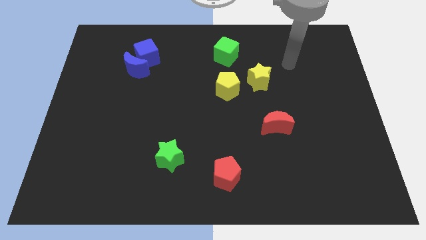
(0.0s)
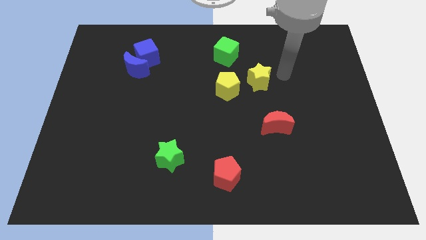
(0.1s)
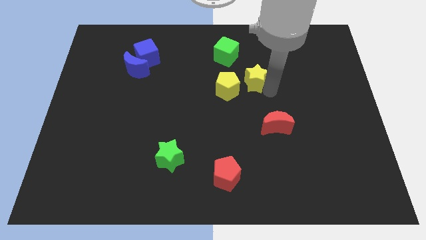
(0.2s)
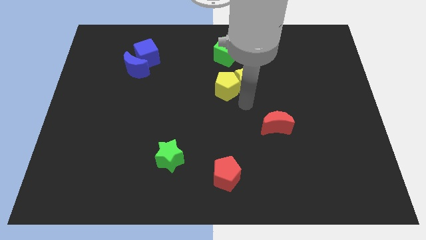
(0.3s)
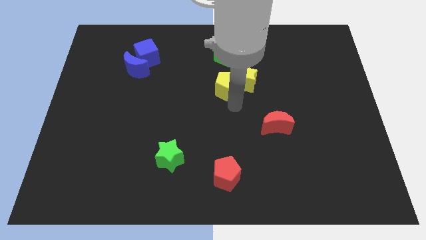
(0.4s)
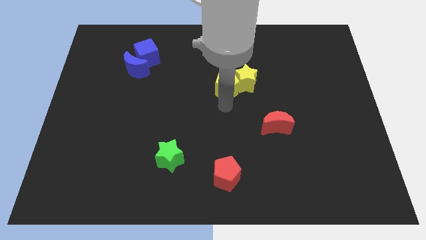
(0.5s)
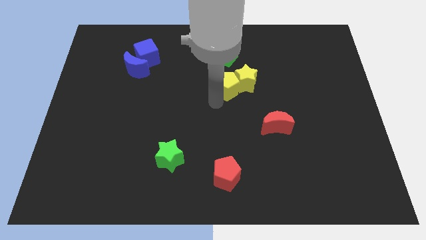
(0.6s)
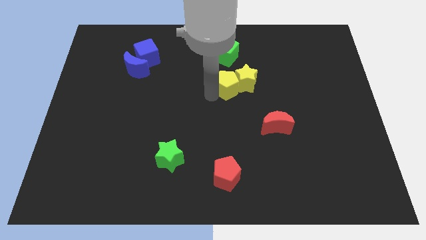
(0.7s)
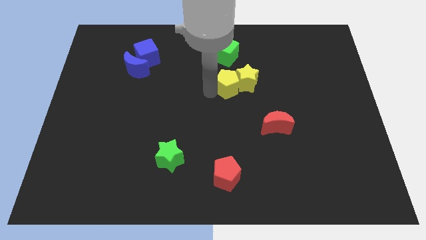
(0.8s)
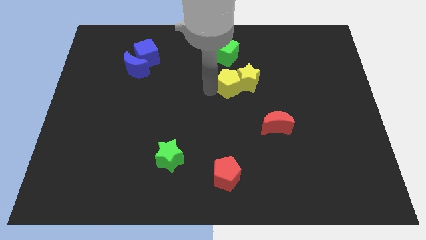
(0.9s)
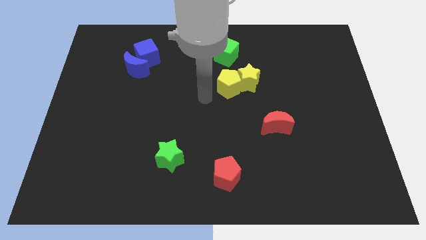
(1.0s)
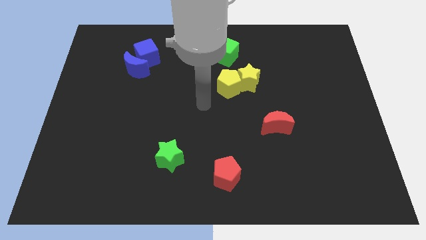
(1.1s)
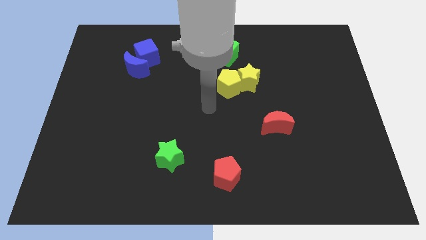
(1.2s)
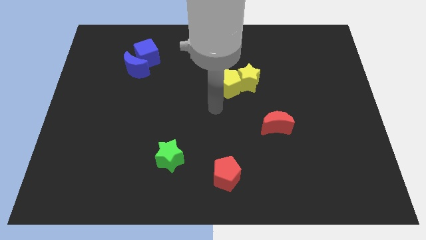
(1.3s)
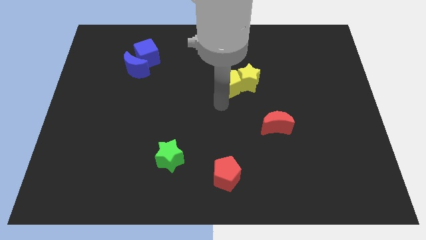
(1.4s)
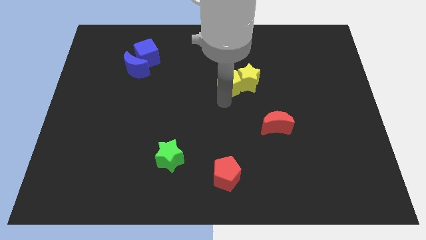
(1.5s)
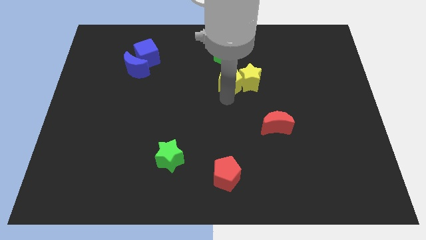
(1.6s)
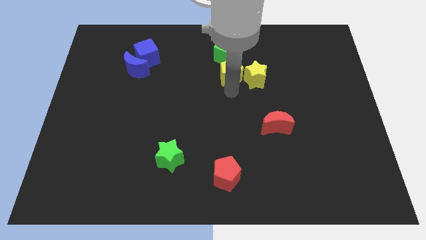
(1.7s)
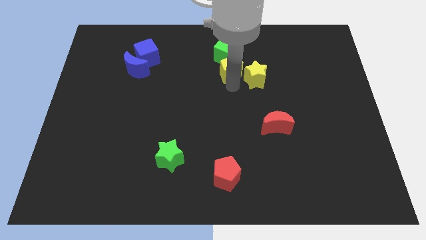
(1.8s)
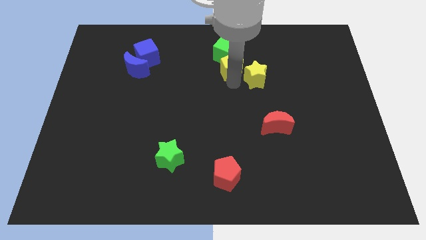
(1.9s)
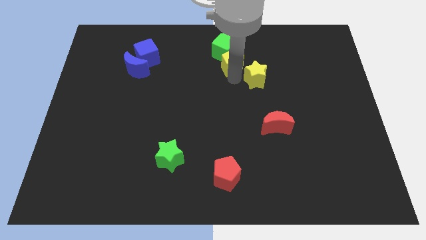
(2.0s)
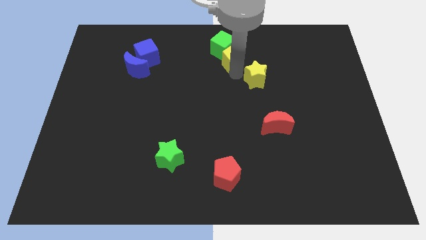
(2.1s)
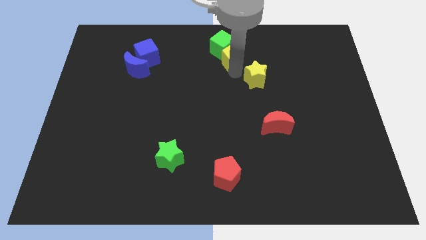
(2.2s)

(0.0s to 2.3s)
put the yellow pentagon next to the green cube

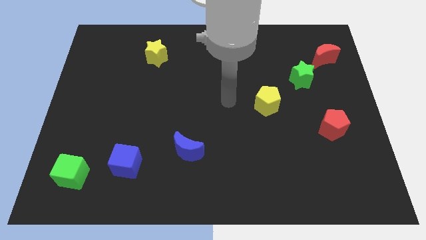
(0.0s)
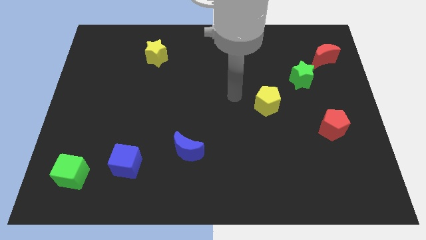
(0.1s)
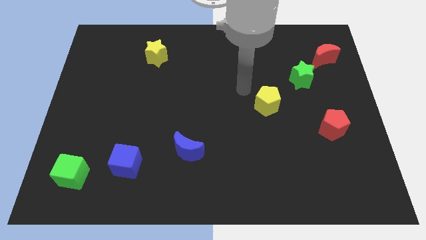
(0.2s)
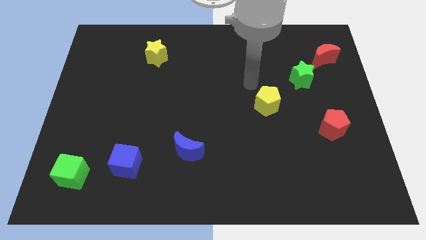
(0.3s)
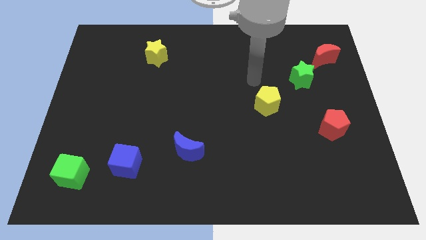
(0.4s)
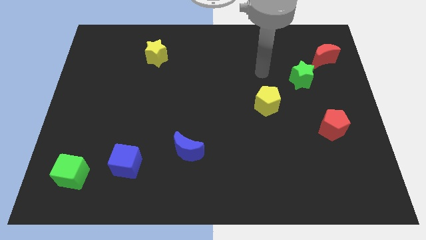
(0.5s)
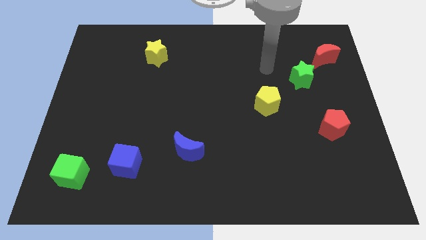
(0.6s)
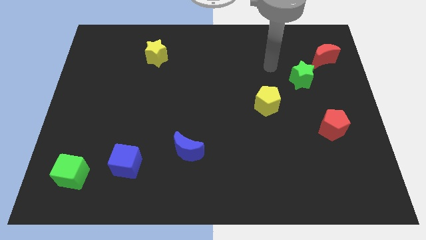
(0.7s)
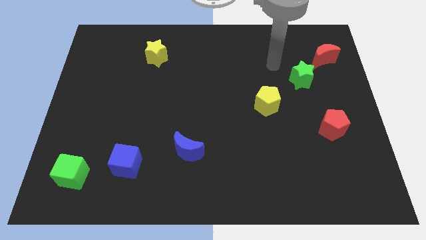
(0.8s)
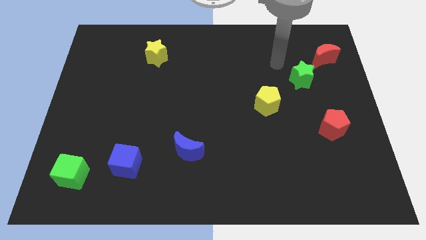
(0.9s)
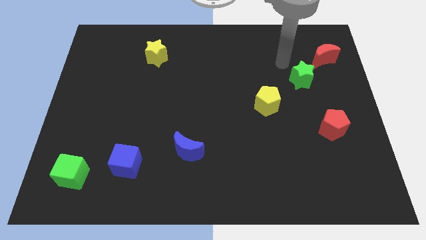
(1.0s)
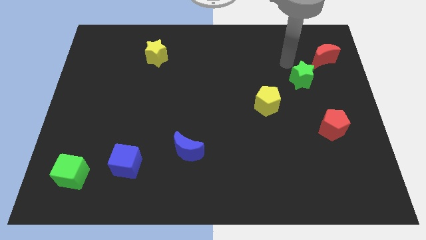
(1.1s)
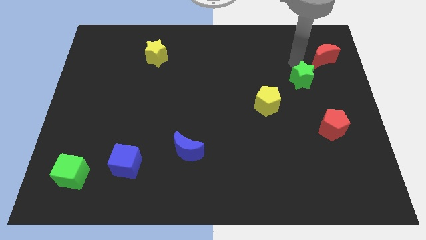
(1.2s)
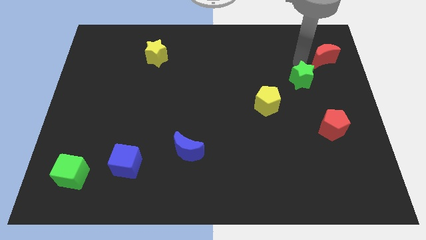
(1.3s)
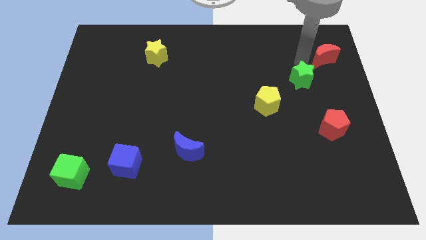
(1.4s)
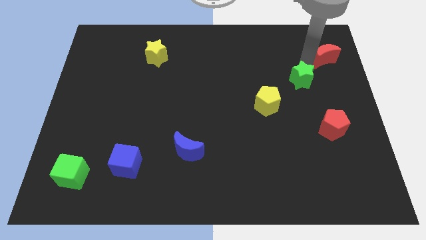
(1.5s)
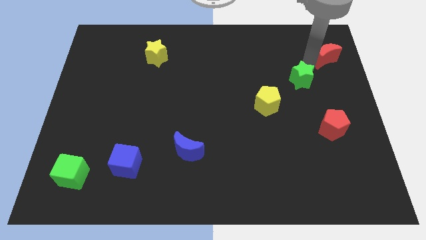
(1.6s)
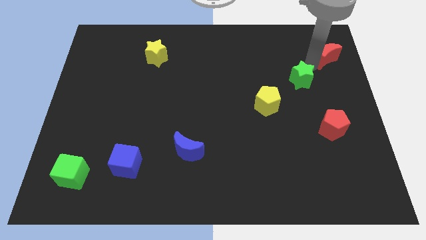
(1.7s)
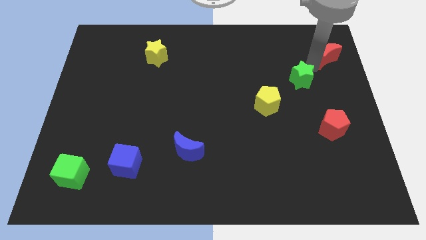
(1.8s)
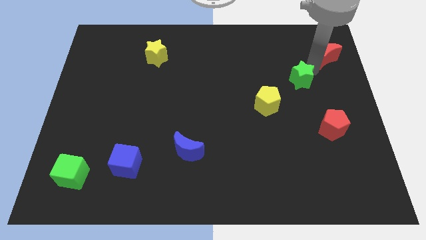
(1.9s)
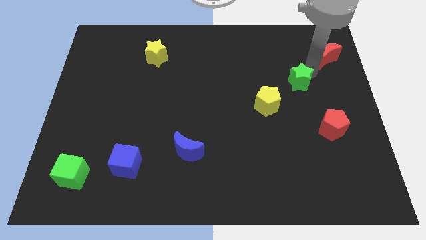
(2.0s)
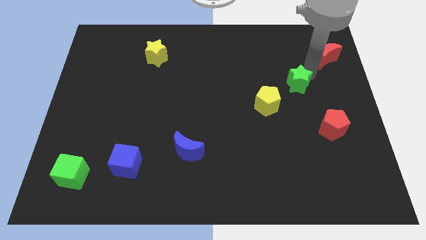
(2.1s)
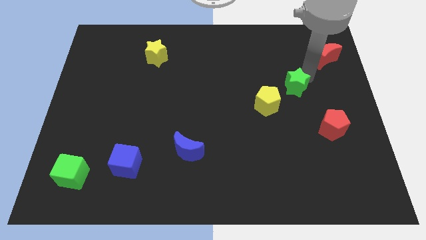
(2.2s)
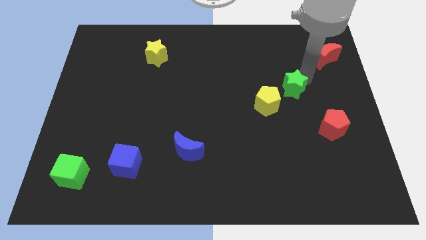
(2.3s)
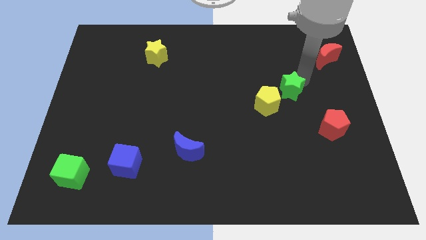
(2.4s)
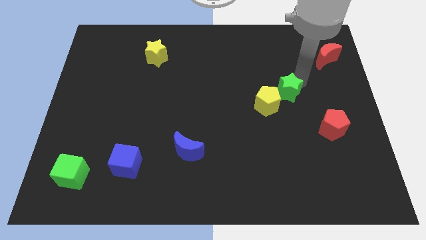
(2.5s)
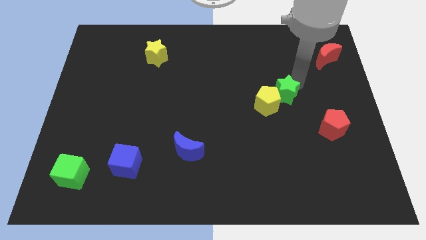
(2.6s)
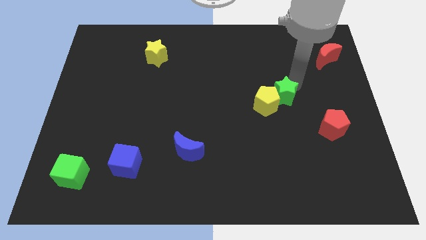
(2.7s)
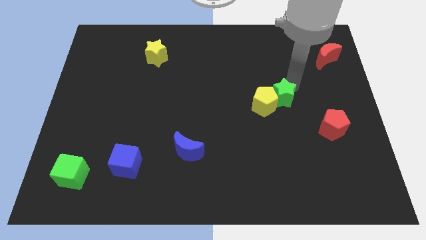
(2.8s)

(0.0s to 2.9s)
put the green star close to the yellow pentagon

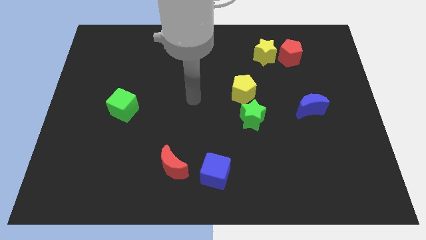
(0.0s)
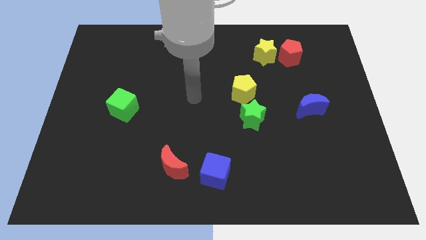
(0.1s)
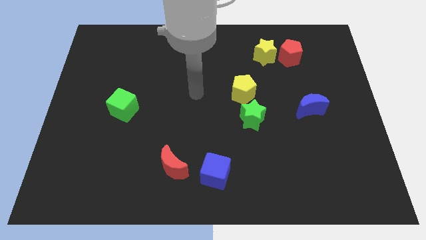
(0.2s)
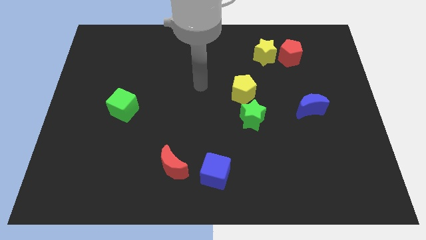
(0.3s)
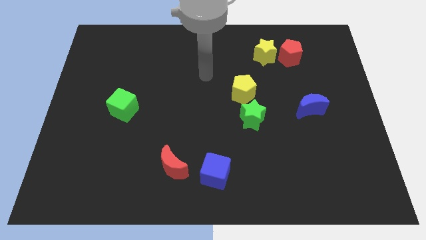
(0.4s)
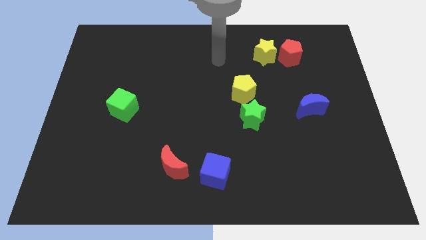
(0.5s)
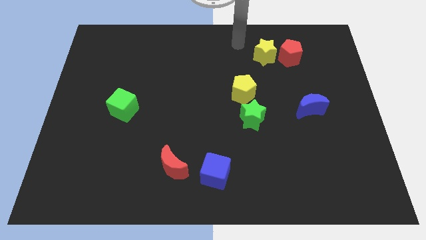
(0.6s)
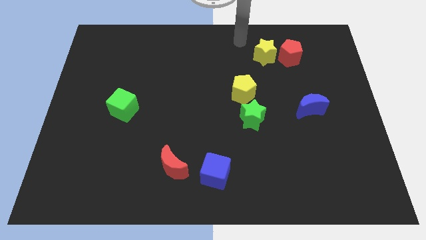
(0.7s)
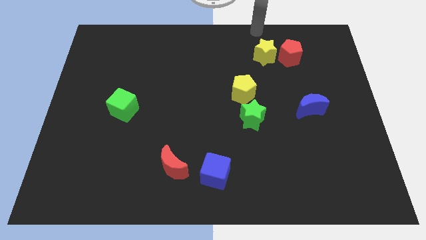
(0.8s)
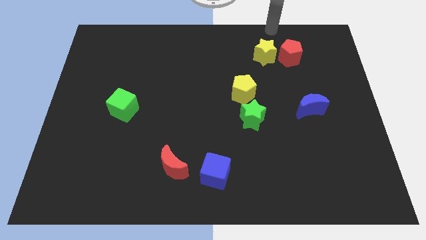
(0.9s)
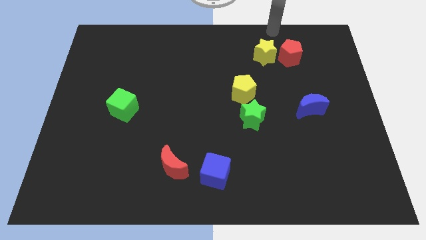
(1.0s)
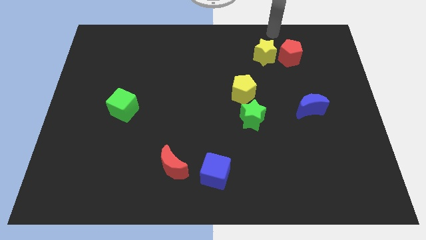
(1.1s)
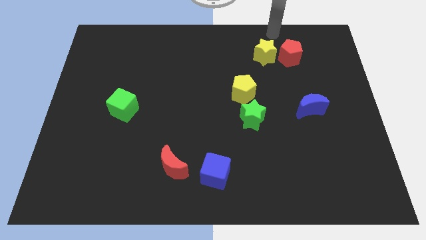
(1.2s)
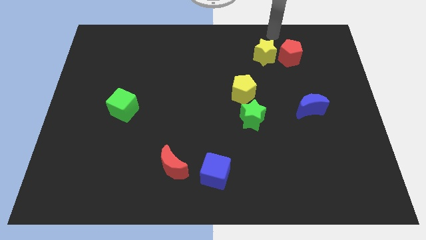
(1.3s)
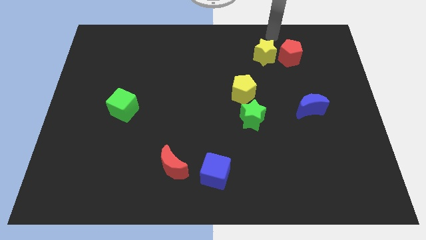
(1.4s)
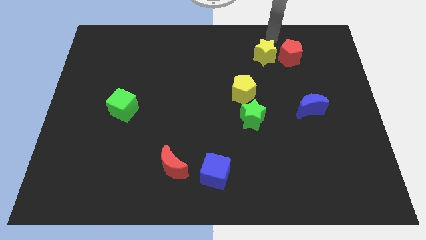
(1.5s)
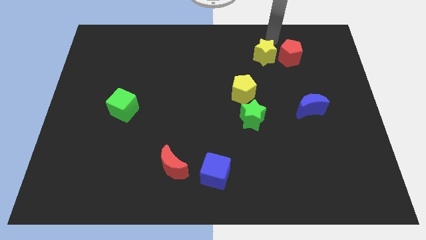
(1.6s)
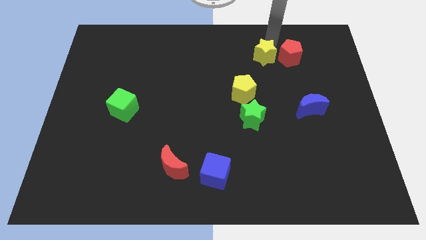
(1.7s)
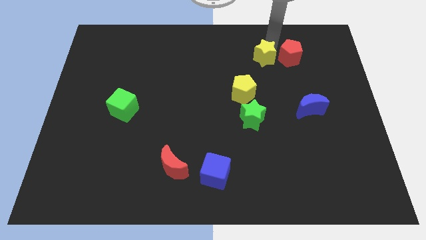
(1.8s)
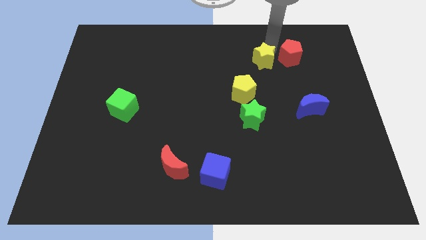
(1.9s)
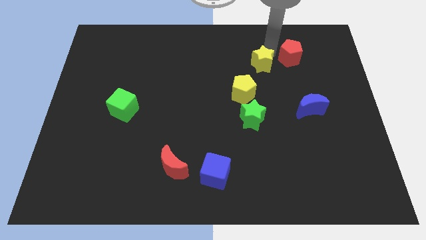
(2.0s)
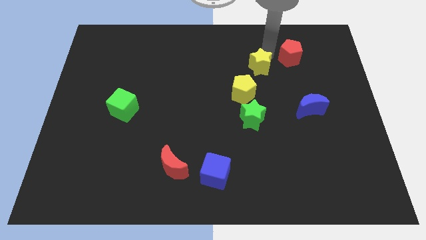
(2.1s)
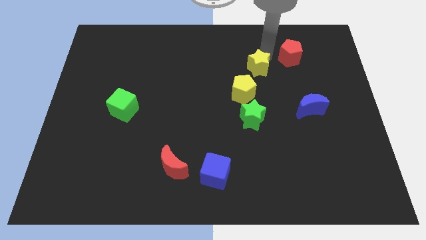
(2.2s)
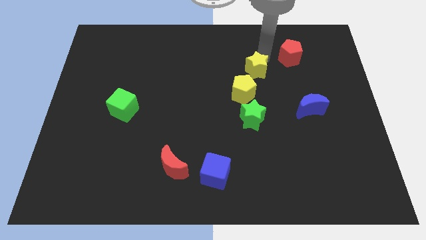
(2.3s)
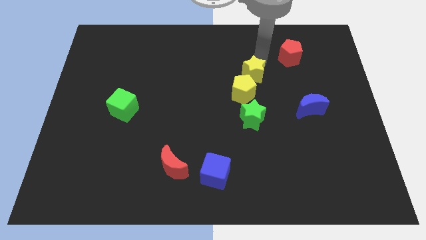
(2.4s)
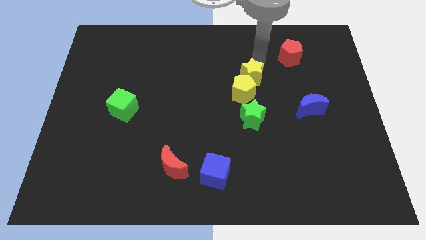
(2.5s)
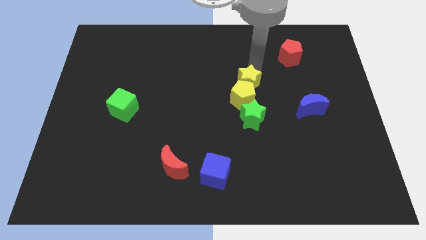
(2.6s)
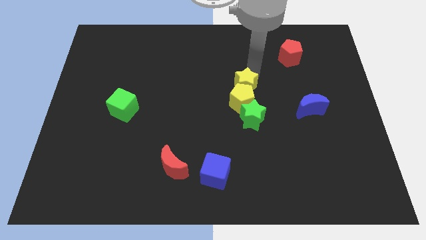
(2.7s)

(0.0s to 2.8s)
put the yellow star towards the yellow pentagon

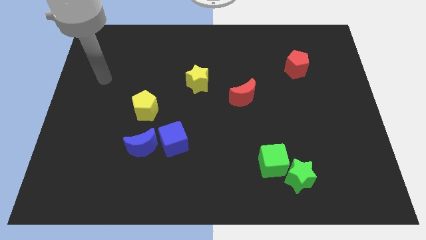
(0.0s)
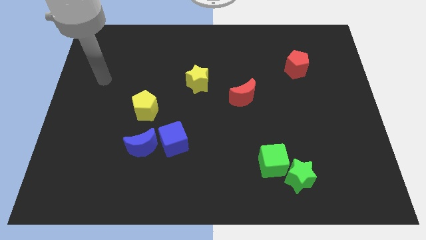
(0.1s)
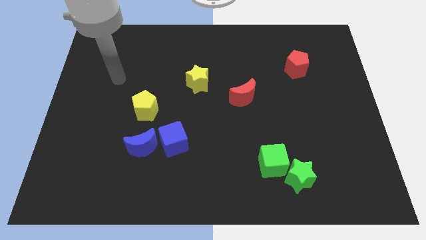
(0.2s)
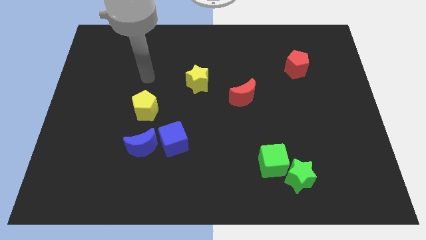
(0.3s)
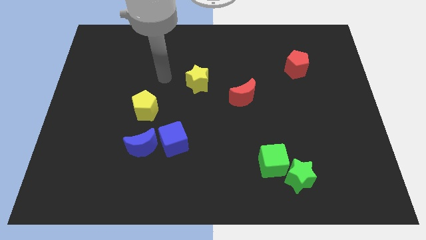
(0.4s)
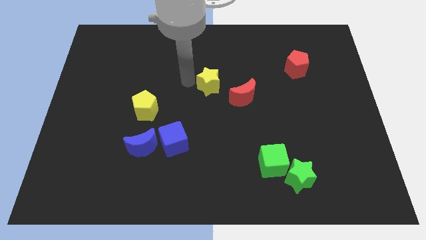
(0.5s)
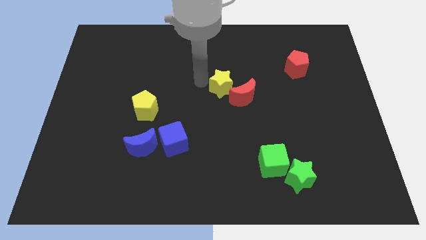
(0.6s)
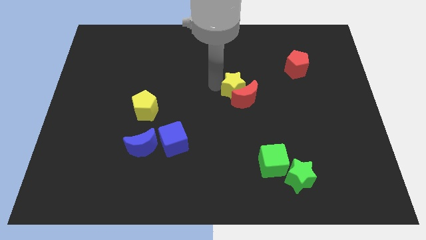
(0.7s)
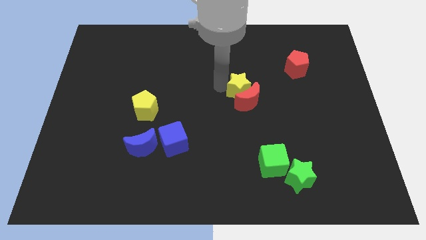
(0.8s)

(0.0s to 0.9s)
push the yellow star close to the red moon
